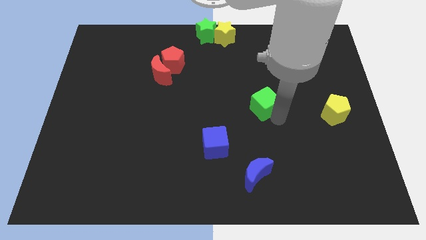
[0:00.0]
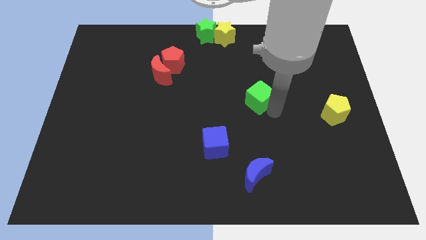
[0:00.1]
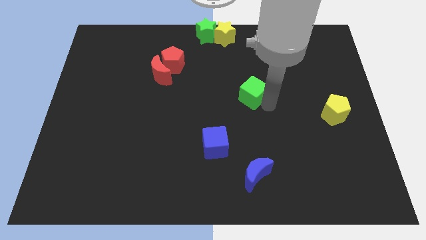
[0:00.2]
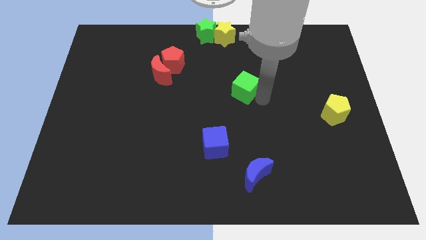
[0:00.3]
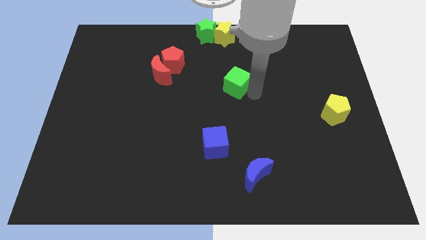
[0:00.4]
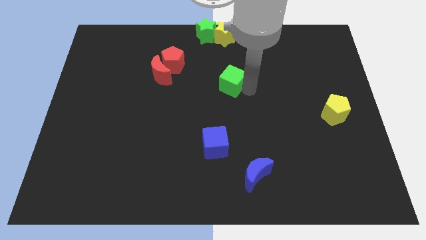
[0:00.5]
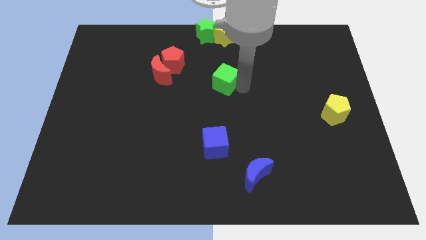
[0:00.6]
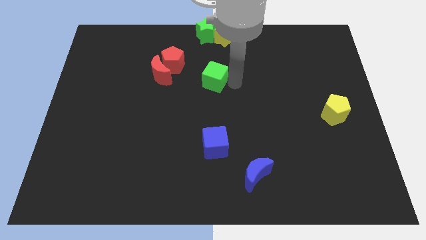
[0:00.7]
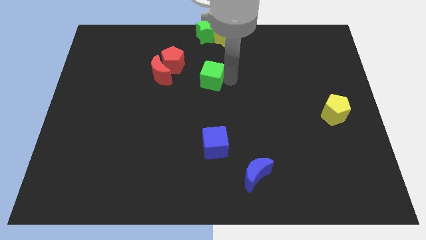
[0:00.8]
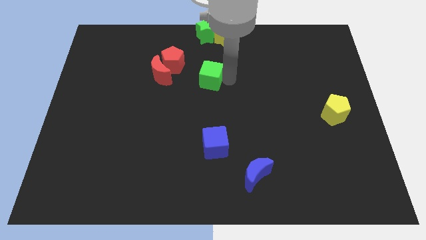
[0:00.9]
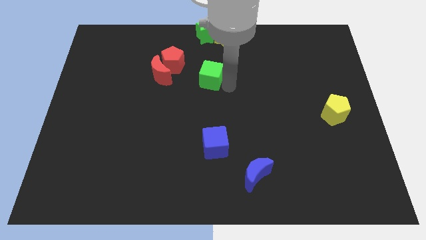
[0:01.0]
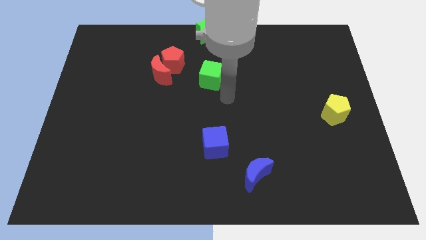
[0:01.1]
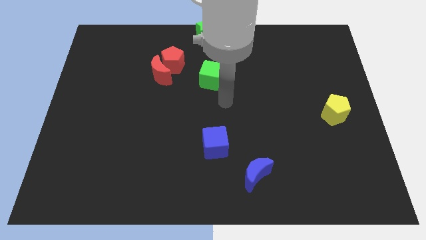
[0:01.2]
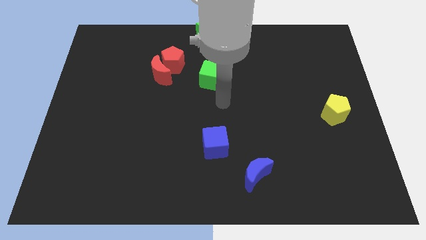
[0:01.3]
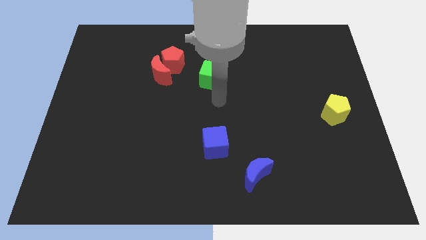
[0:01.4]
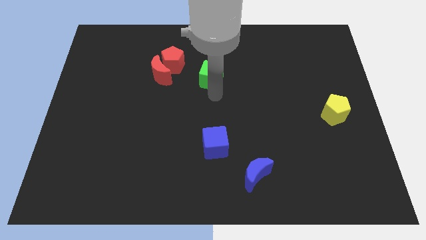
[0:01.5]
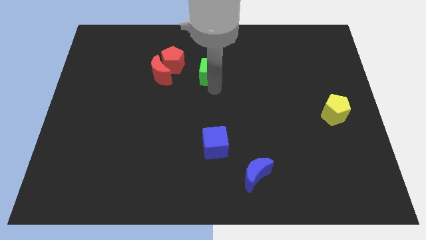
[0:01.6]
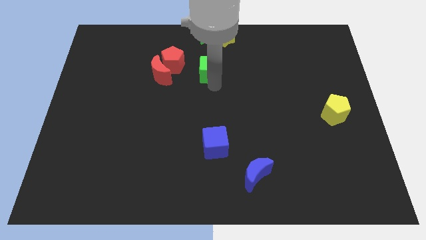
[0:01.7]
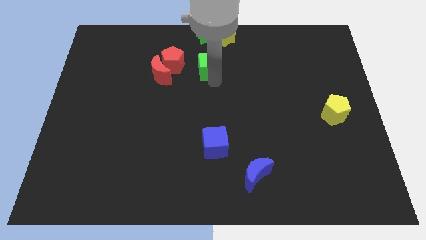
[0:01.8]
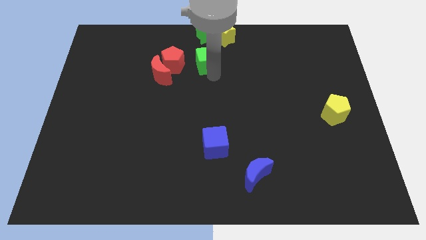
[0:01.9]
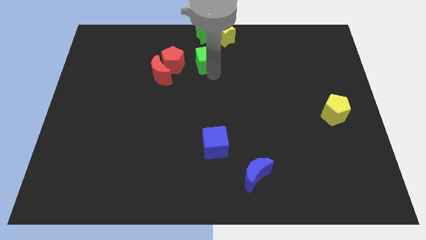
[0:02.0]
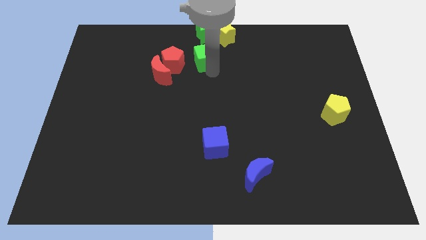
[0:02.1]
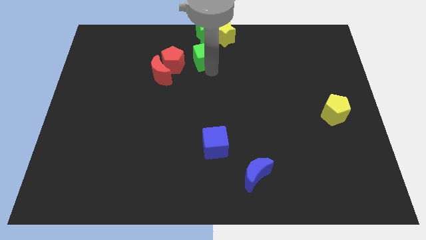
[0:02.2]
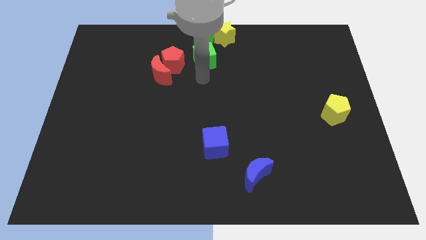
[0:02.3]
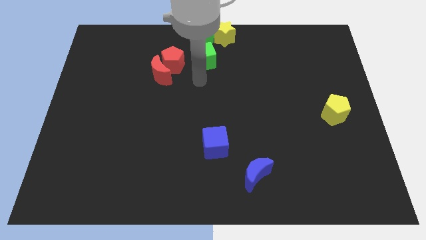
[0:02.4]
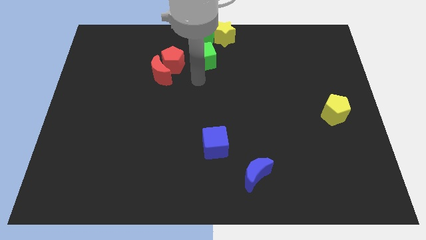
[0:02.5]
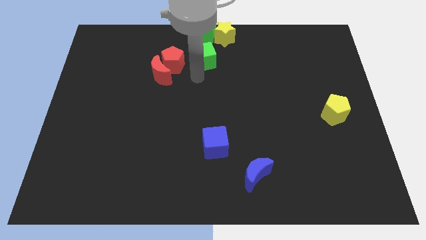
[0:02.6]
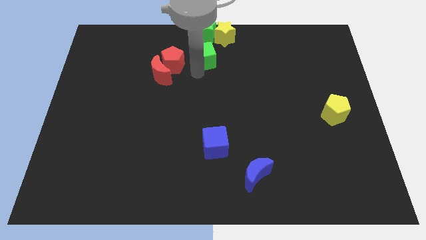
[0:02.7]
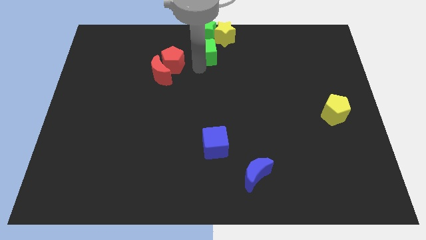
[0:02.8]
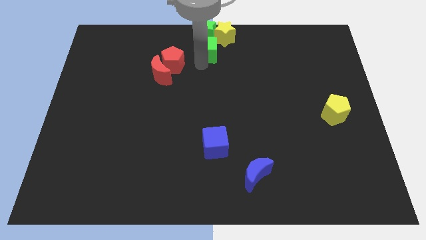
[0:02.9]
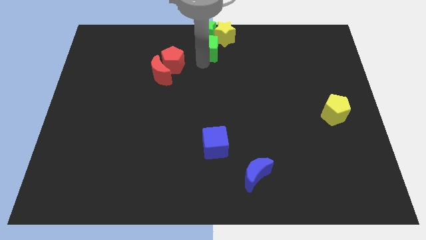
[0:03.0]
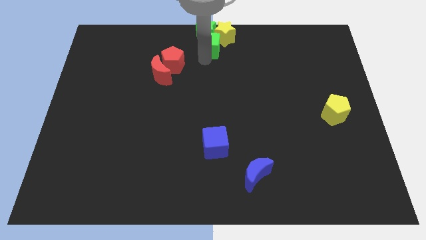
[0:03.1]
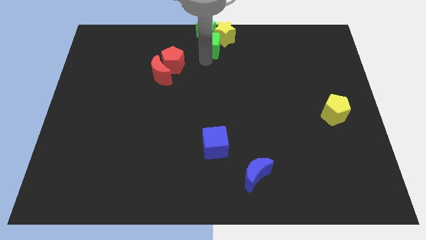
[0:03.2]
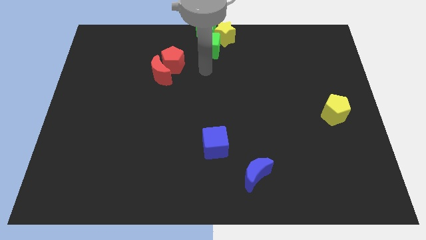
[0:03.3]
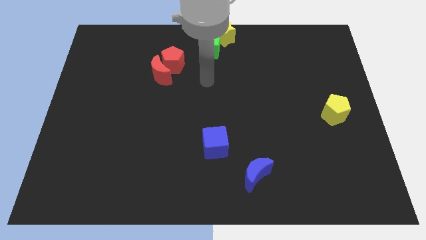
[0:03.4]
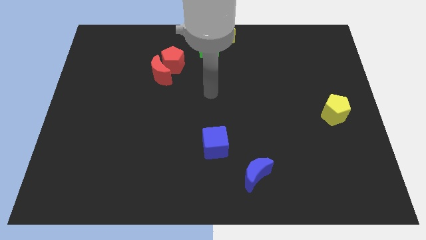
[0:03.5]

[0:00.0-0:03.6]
push the green cube towards the top center of the board

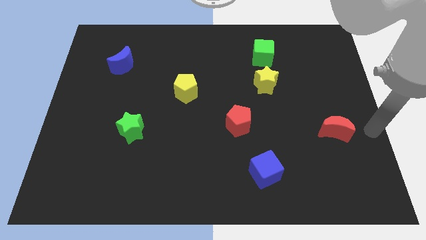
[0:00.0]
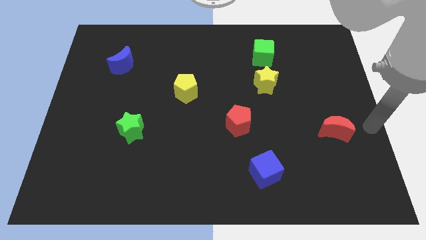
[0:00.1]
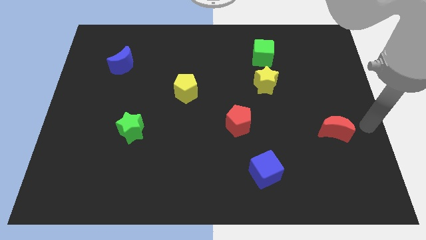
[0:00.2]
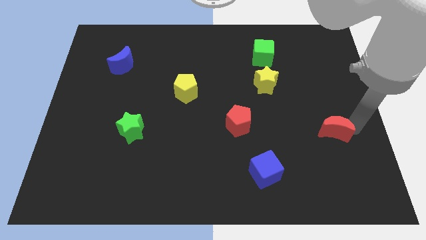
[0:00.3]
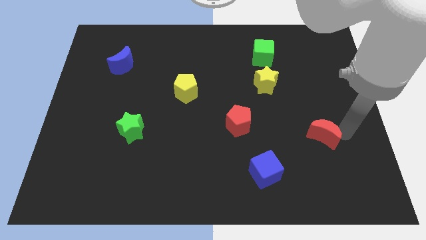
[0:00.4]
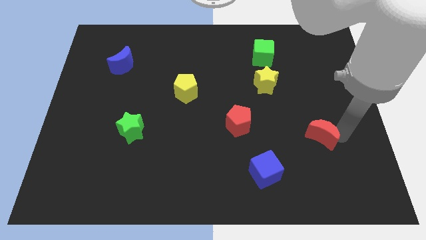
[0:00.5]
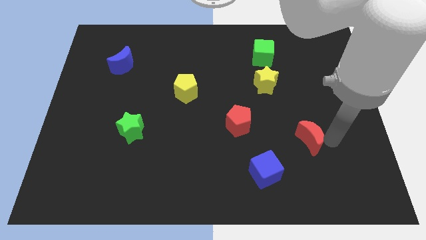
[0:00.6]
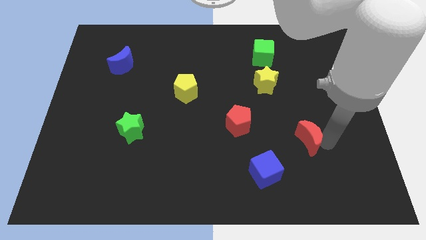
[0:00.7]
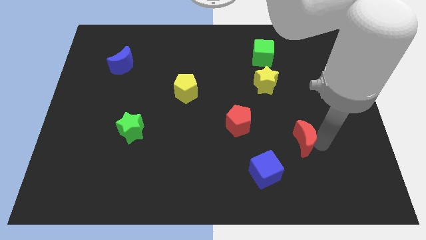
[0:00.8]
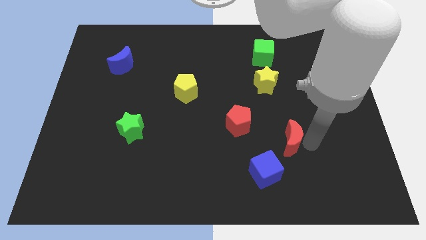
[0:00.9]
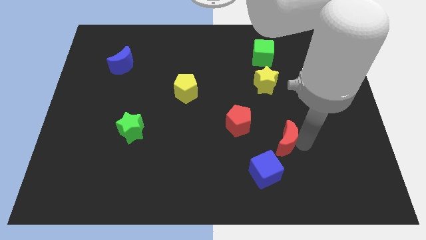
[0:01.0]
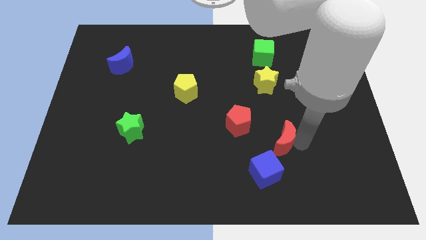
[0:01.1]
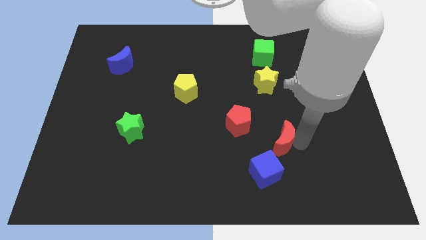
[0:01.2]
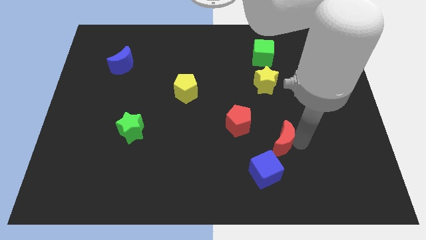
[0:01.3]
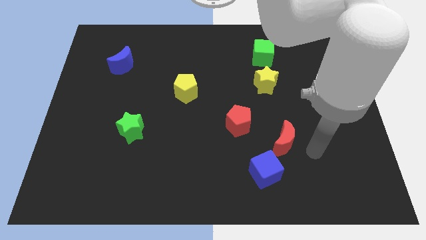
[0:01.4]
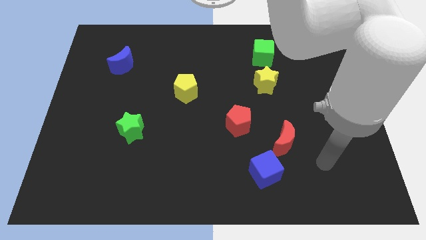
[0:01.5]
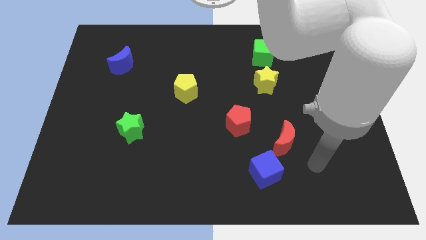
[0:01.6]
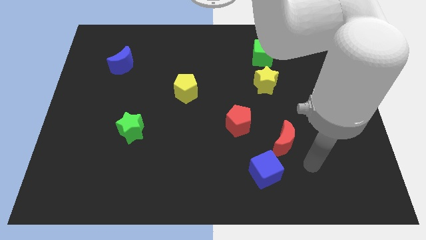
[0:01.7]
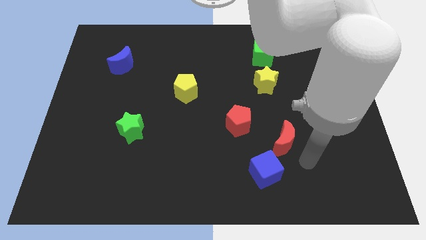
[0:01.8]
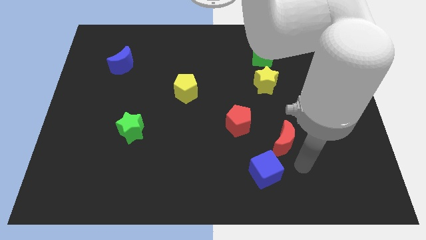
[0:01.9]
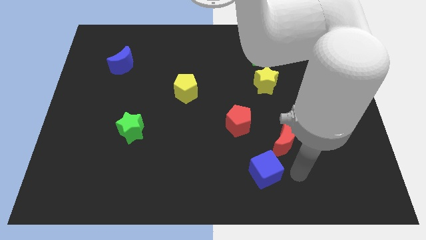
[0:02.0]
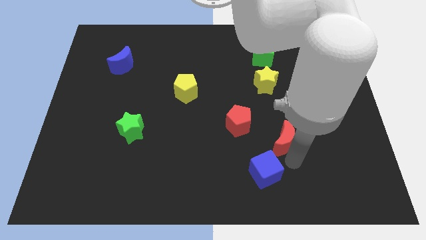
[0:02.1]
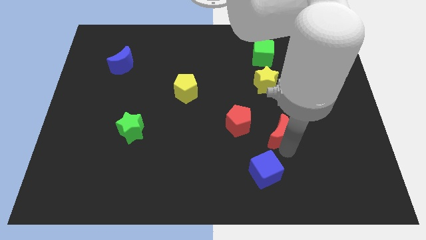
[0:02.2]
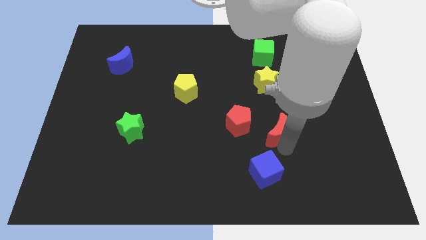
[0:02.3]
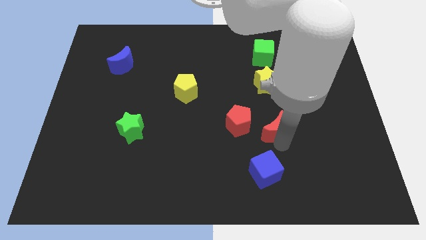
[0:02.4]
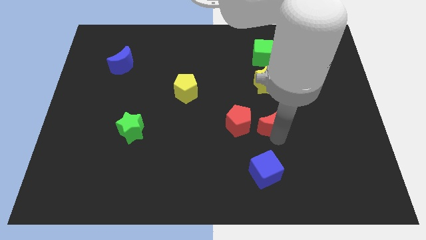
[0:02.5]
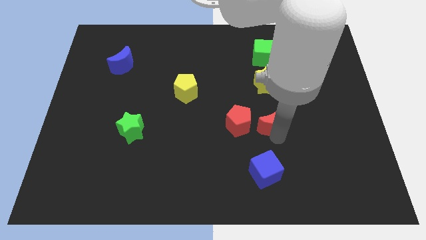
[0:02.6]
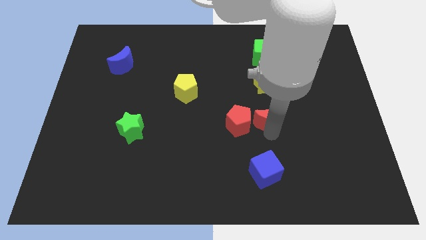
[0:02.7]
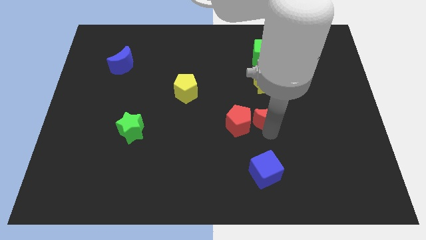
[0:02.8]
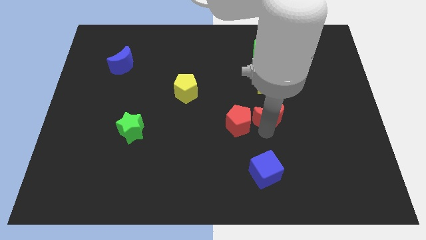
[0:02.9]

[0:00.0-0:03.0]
push the red moon to the right side of the red pentagon

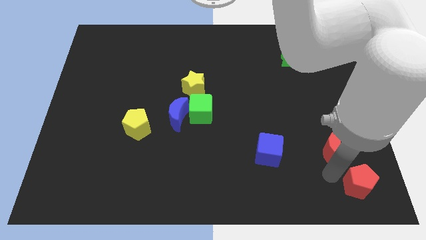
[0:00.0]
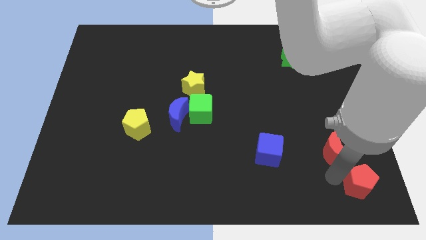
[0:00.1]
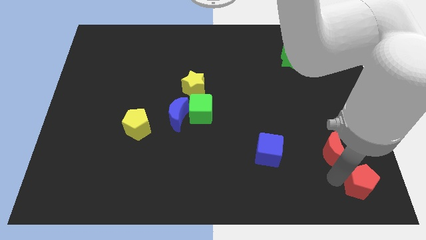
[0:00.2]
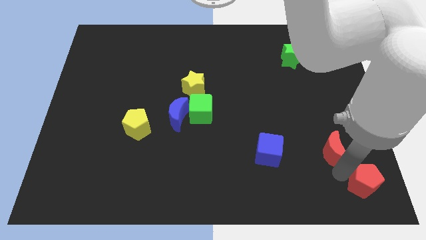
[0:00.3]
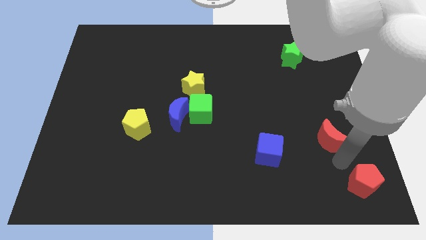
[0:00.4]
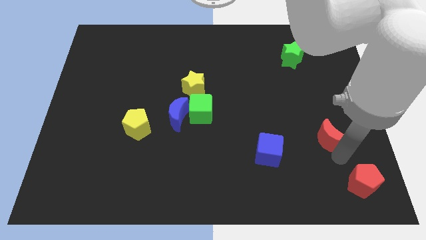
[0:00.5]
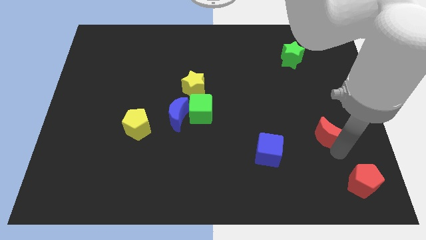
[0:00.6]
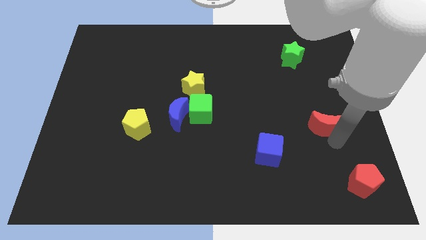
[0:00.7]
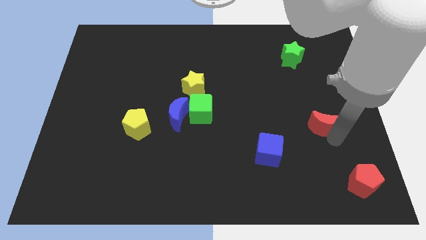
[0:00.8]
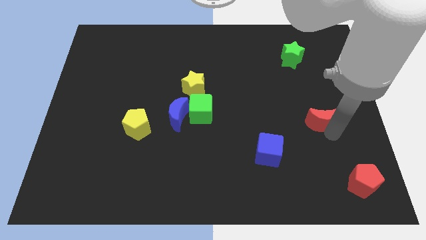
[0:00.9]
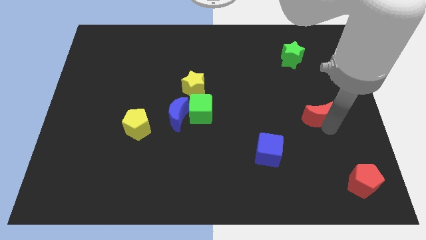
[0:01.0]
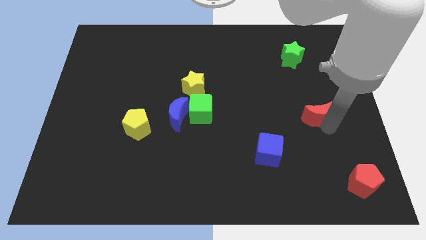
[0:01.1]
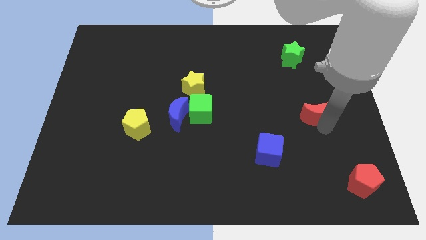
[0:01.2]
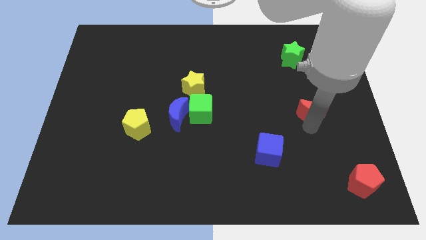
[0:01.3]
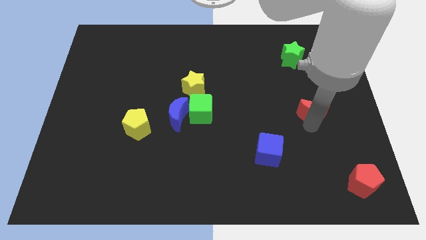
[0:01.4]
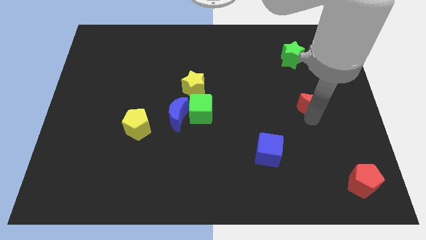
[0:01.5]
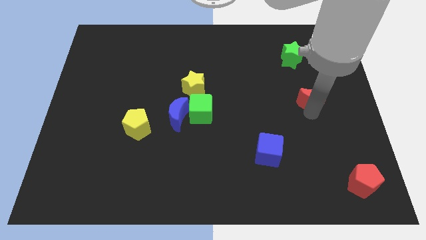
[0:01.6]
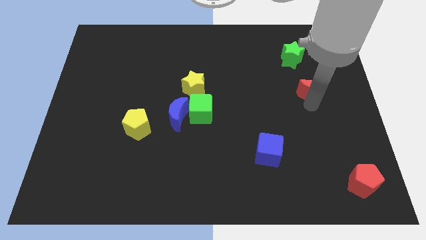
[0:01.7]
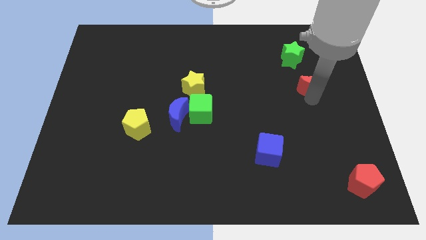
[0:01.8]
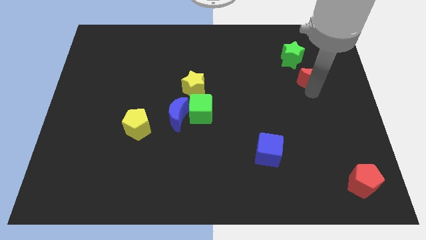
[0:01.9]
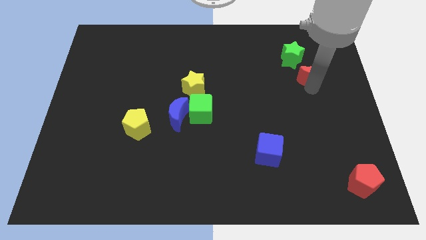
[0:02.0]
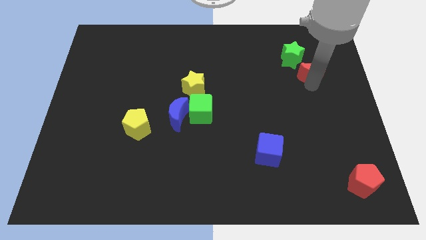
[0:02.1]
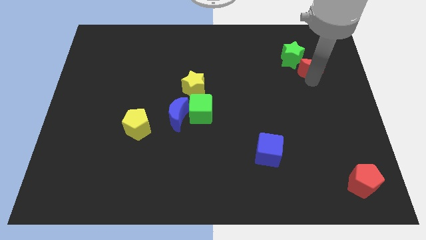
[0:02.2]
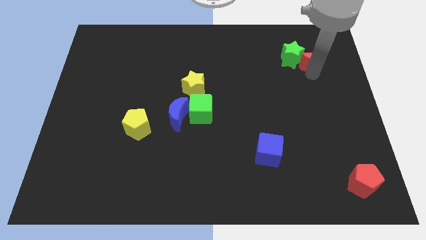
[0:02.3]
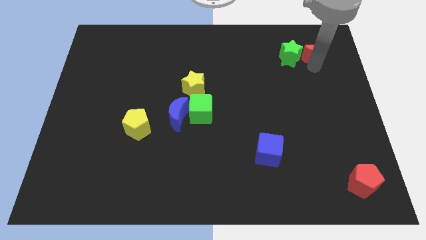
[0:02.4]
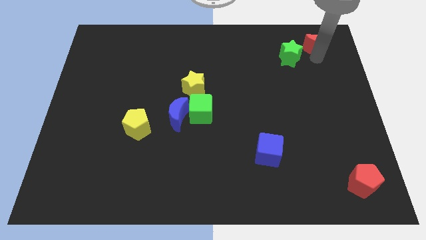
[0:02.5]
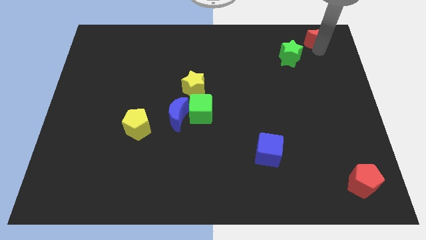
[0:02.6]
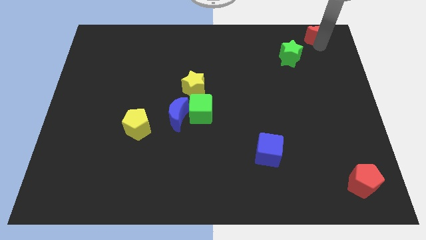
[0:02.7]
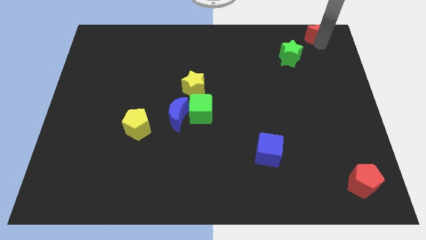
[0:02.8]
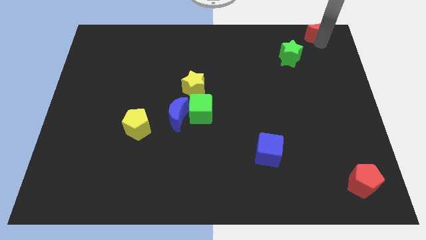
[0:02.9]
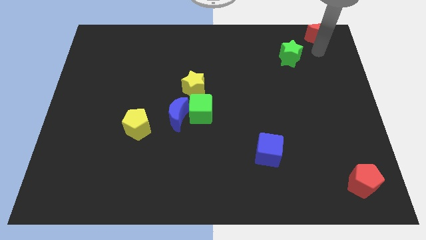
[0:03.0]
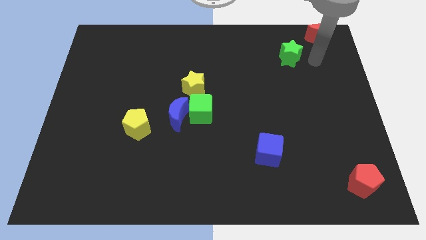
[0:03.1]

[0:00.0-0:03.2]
push the red crescent to the top of the board
